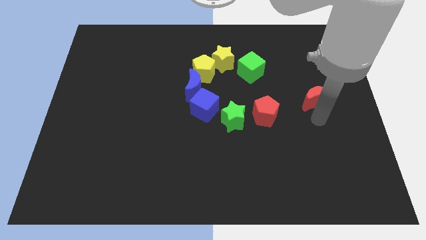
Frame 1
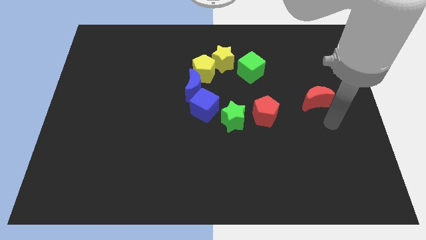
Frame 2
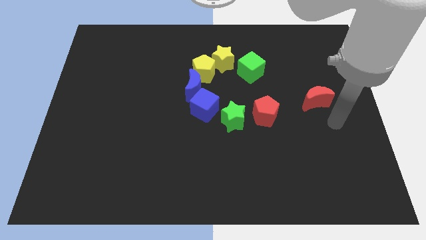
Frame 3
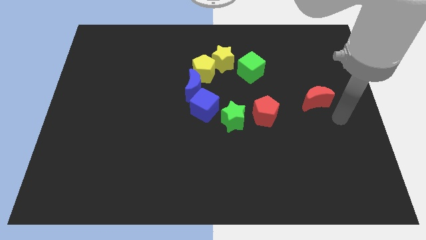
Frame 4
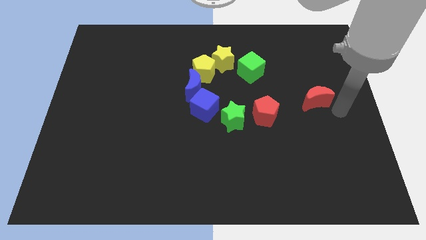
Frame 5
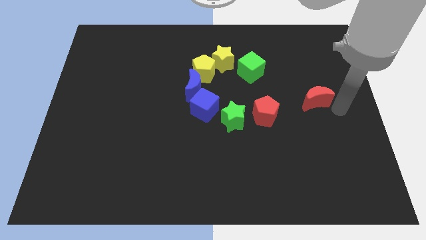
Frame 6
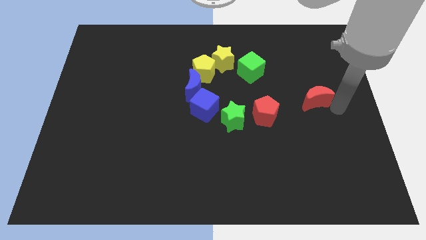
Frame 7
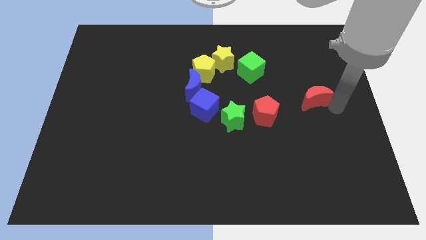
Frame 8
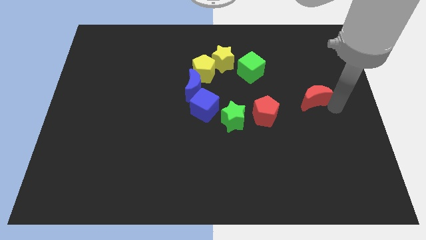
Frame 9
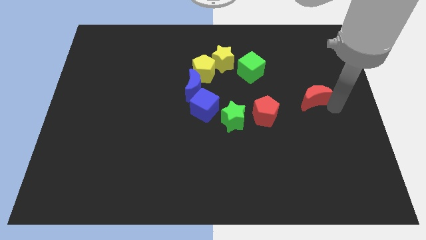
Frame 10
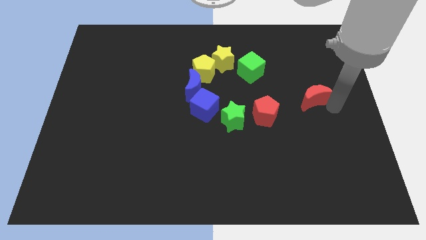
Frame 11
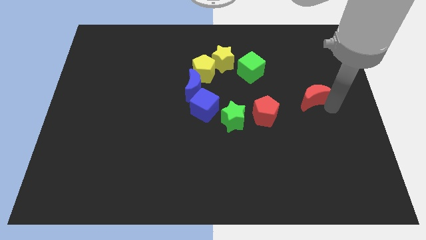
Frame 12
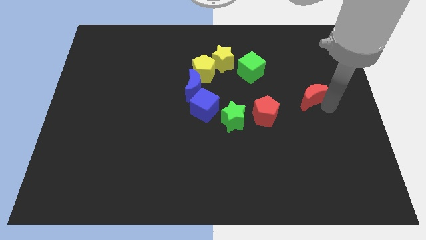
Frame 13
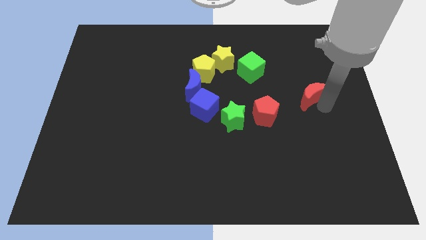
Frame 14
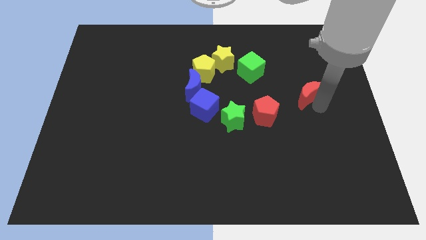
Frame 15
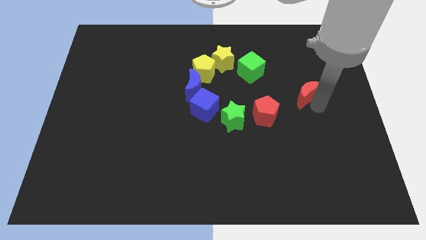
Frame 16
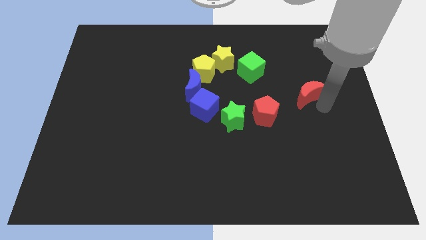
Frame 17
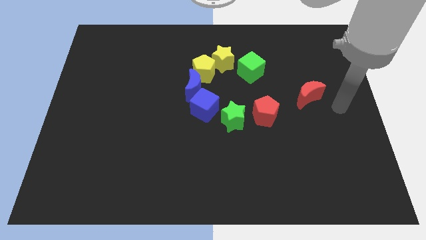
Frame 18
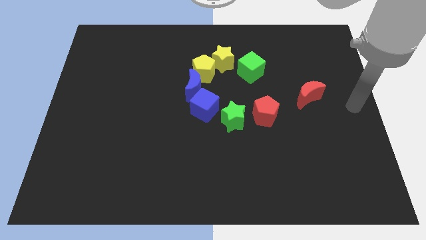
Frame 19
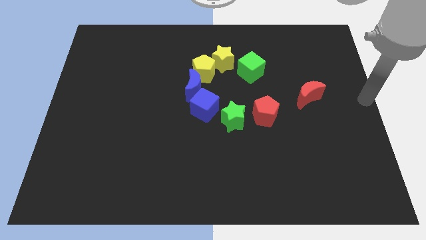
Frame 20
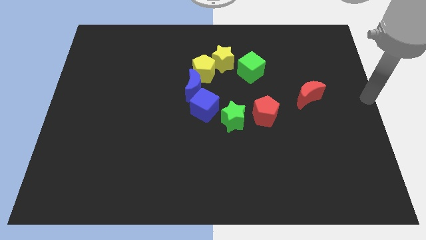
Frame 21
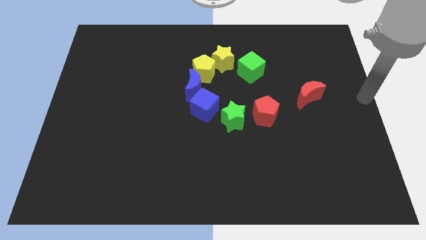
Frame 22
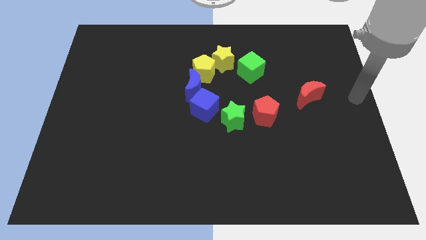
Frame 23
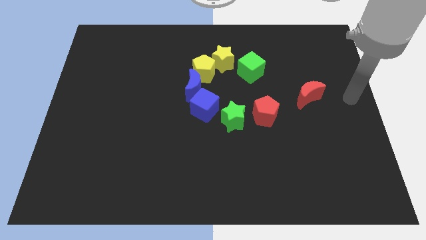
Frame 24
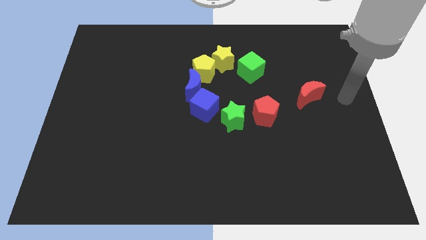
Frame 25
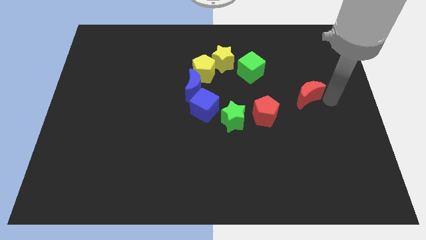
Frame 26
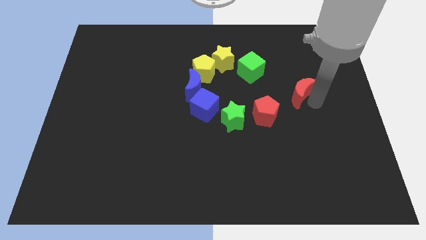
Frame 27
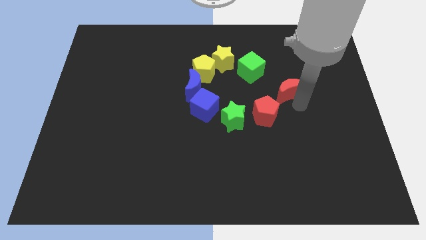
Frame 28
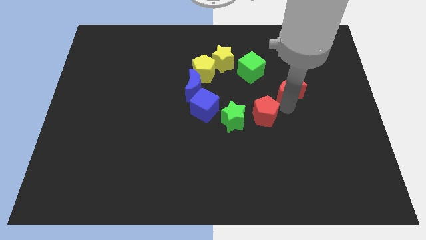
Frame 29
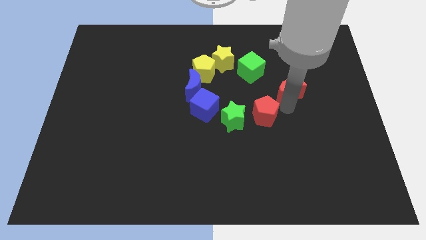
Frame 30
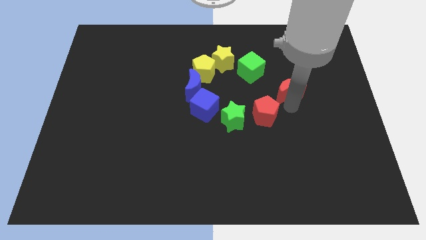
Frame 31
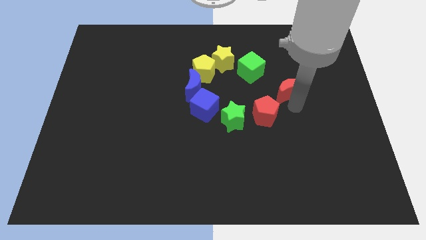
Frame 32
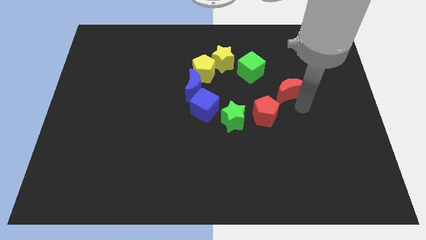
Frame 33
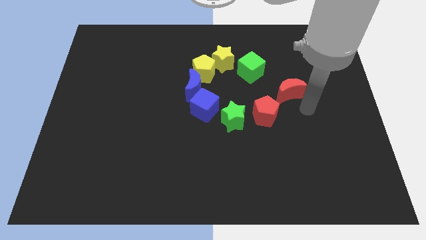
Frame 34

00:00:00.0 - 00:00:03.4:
place the red moon at the top right side of the red pentagon

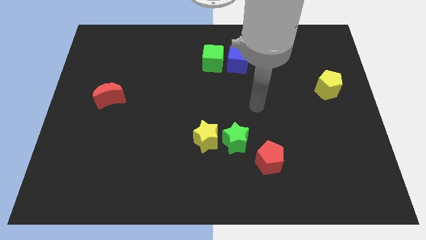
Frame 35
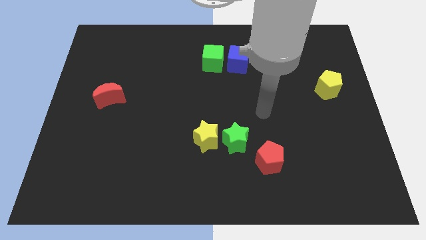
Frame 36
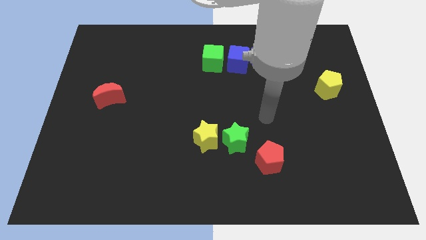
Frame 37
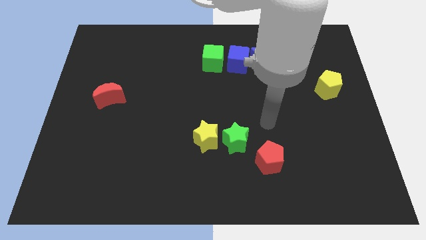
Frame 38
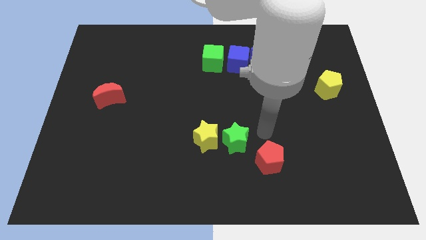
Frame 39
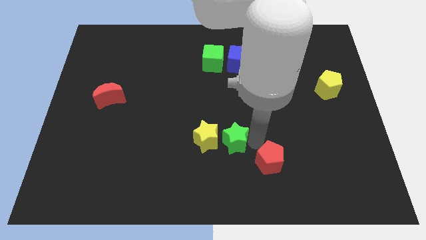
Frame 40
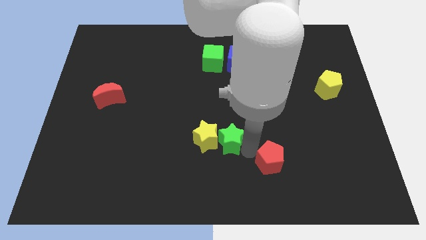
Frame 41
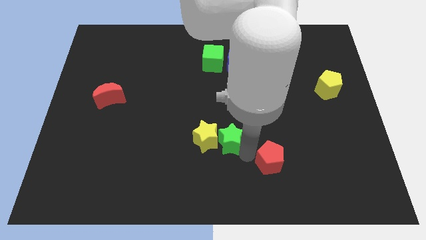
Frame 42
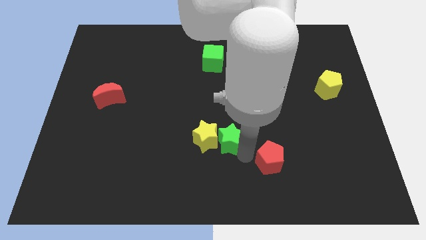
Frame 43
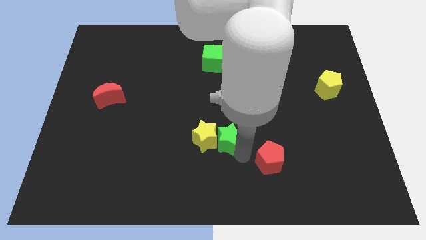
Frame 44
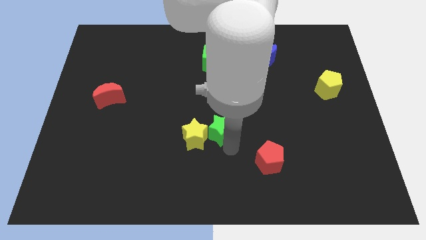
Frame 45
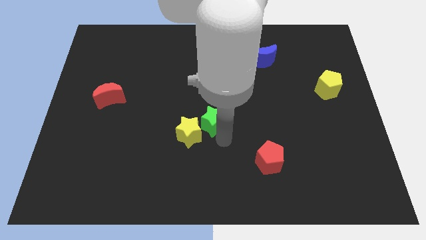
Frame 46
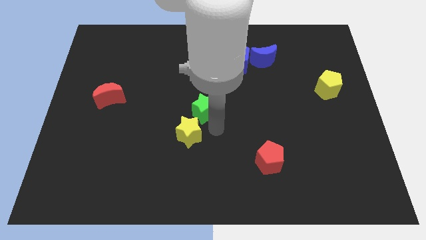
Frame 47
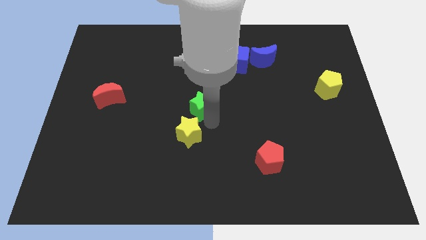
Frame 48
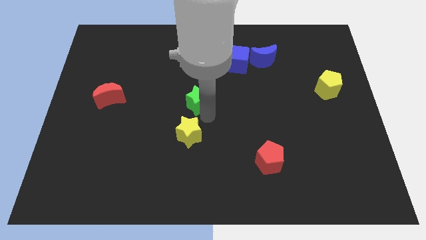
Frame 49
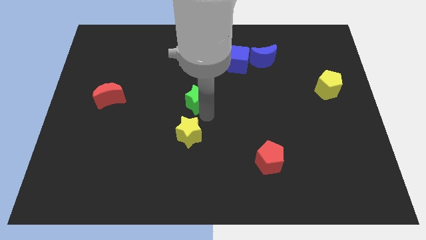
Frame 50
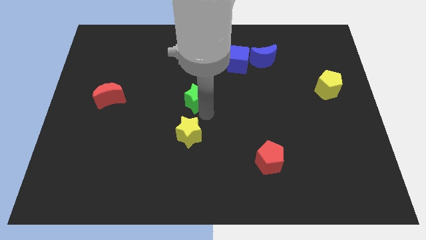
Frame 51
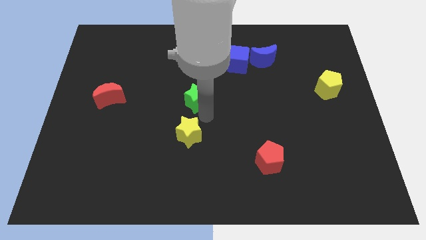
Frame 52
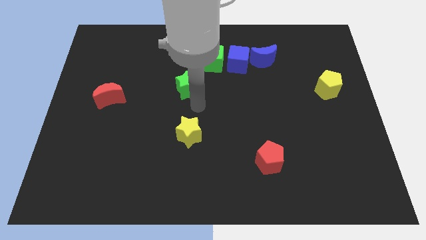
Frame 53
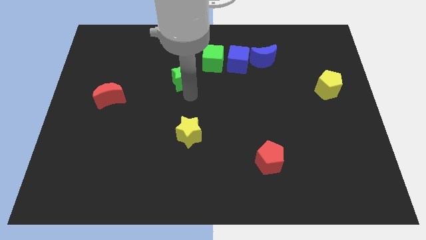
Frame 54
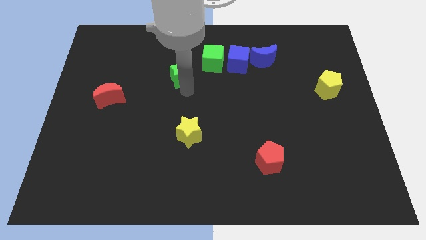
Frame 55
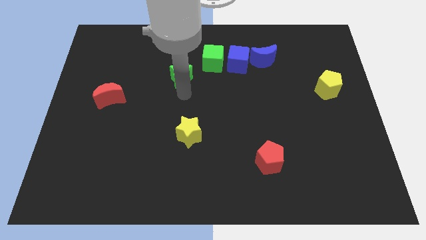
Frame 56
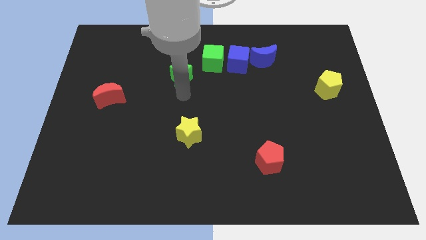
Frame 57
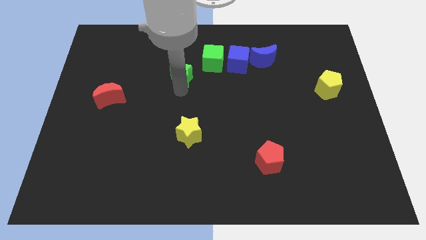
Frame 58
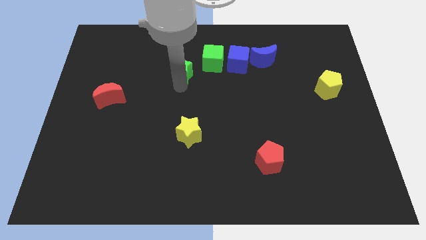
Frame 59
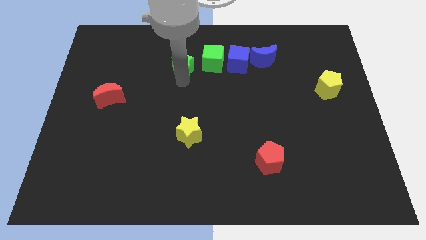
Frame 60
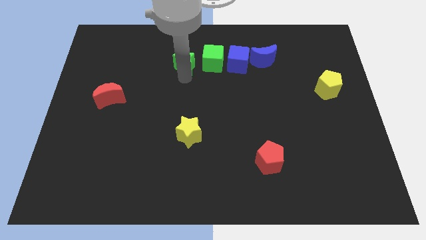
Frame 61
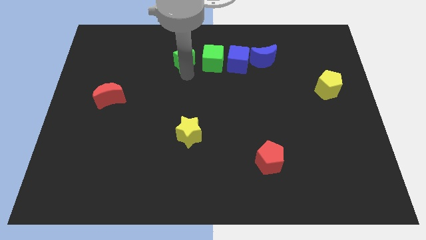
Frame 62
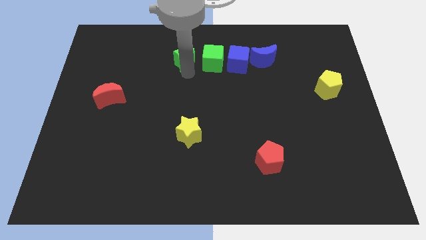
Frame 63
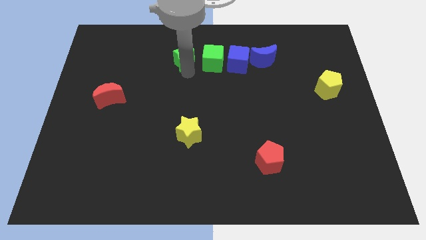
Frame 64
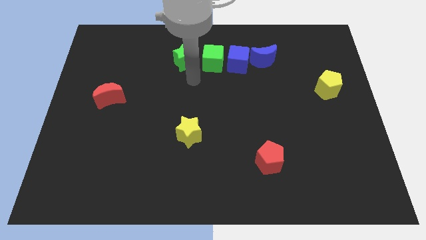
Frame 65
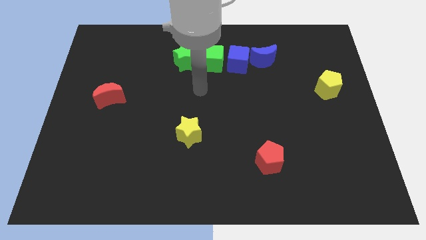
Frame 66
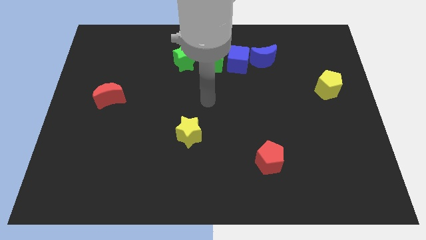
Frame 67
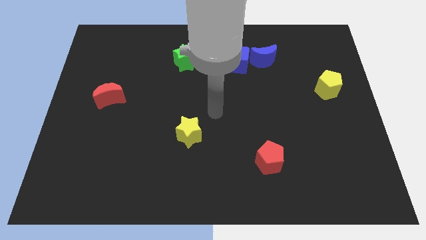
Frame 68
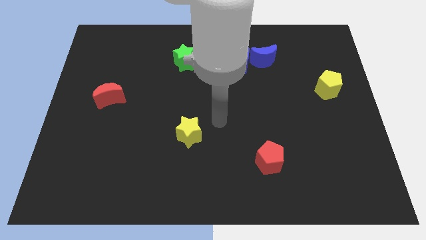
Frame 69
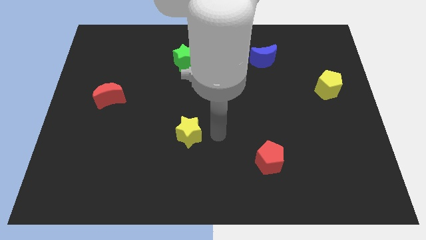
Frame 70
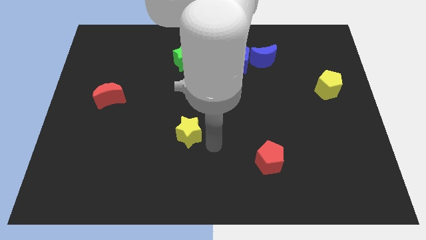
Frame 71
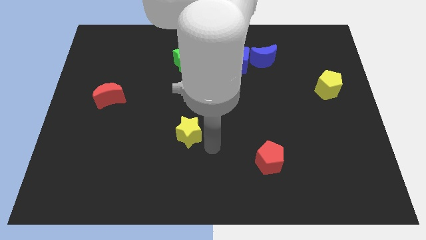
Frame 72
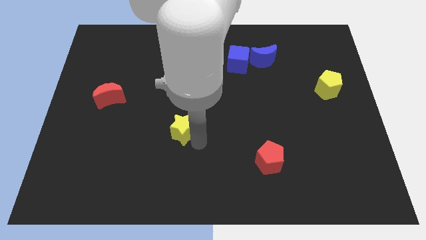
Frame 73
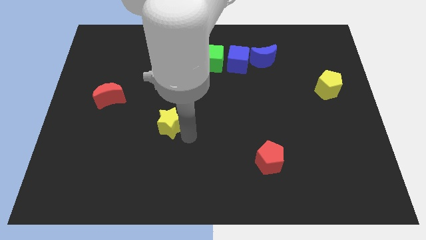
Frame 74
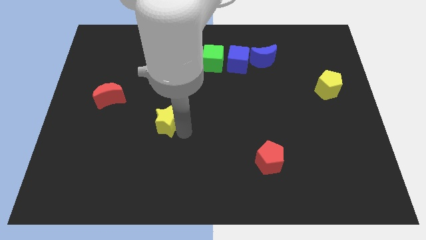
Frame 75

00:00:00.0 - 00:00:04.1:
place green star to the left of green cube

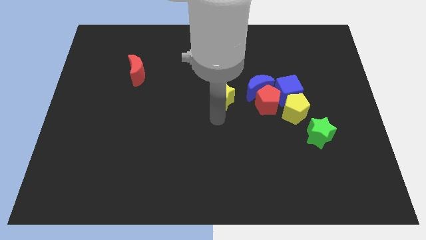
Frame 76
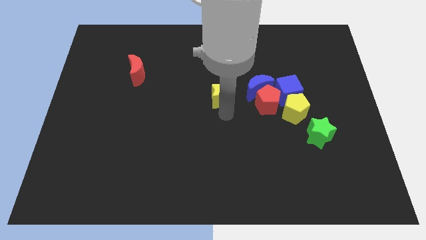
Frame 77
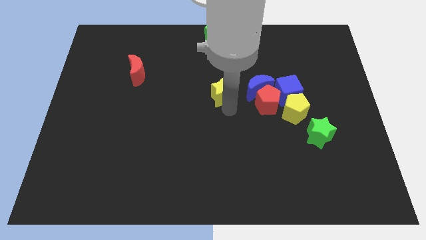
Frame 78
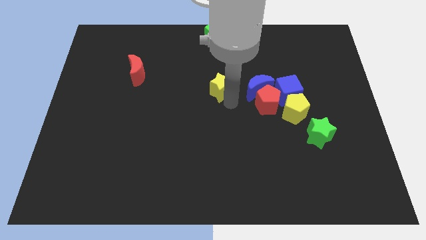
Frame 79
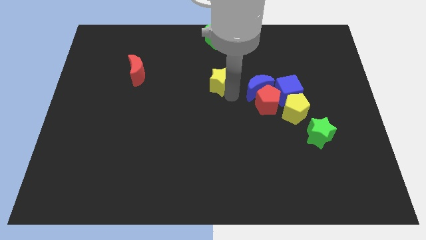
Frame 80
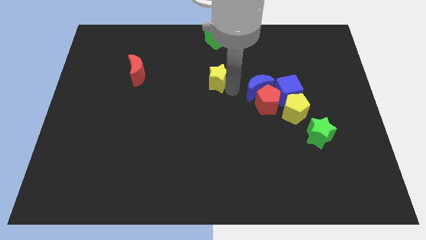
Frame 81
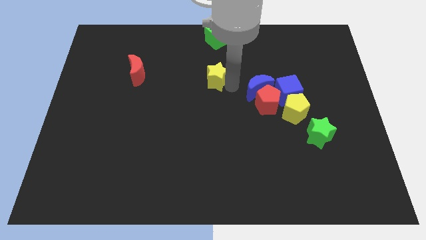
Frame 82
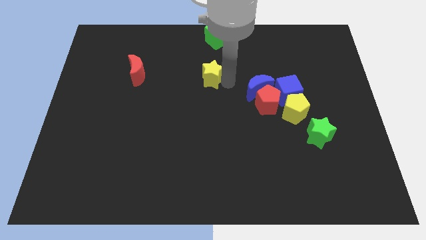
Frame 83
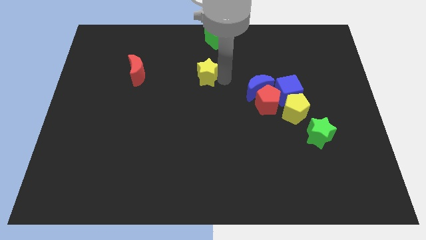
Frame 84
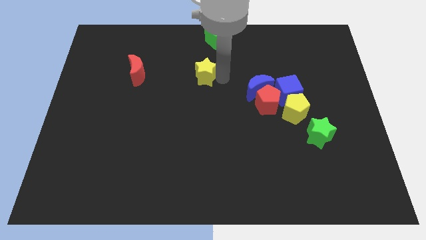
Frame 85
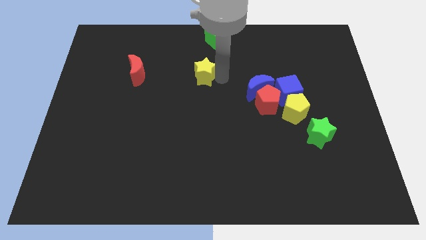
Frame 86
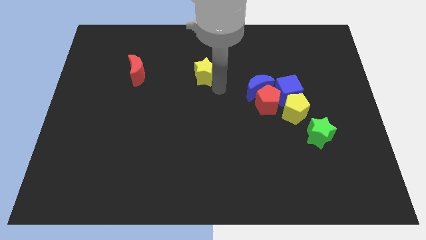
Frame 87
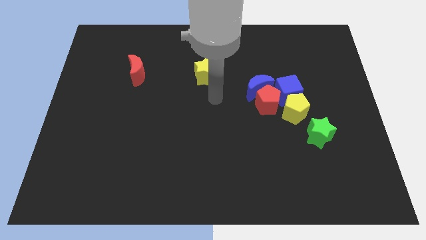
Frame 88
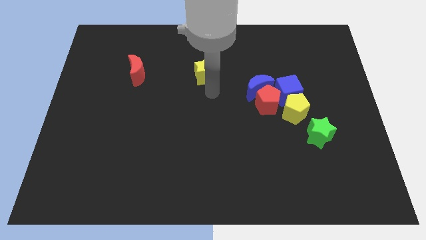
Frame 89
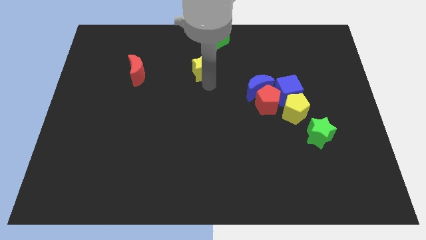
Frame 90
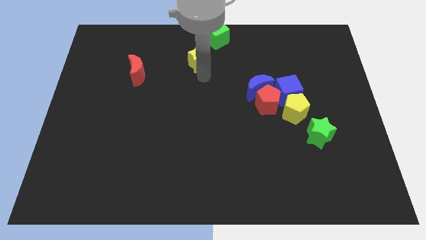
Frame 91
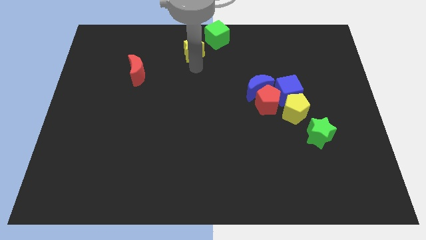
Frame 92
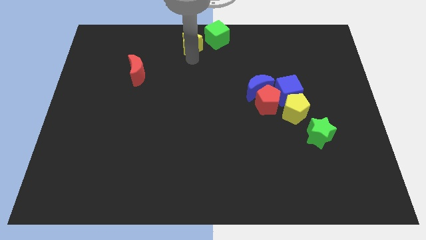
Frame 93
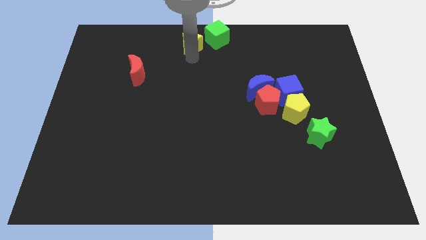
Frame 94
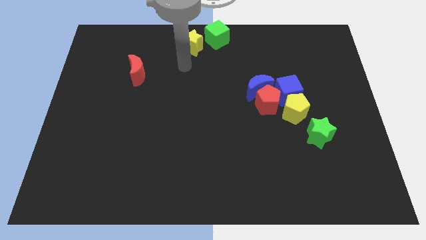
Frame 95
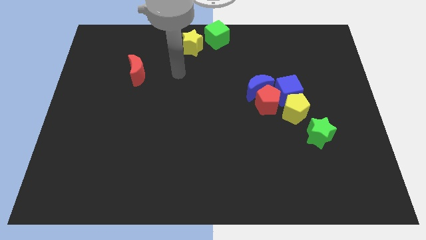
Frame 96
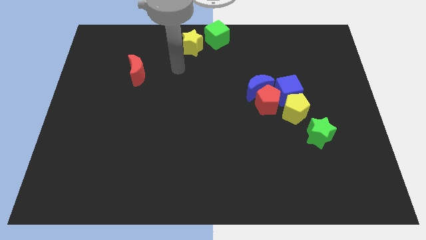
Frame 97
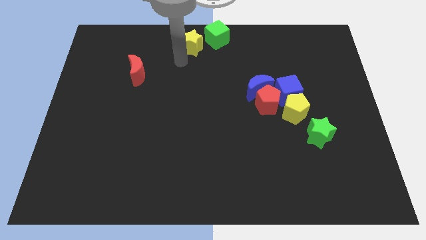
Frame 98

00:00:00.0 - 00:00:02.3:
push the yellow star close to the green cube
